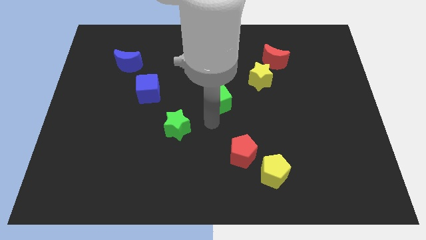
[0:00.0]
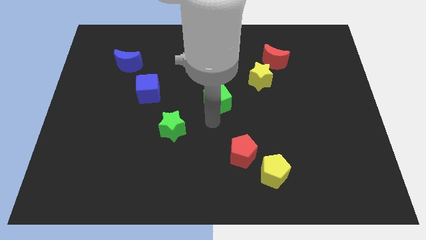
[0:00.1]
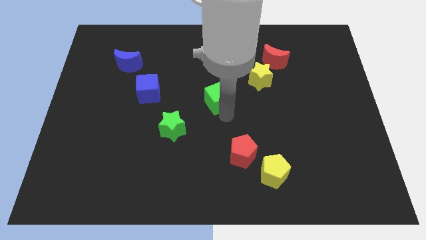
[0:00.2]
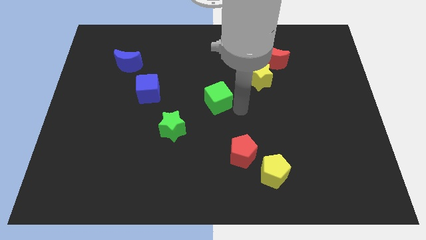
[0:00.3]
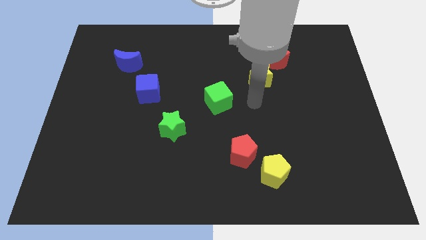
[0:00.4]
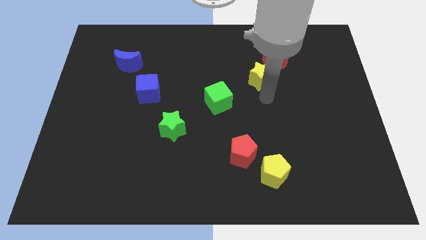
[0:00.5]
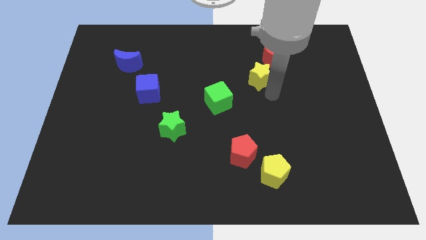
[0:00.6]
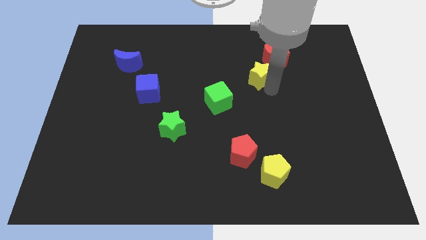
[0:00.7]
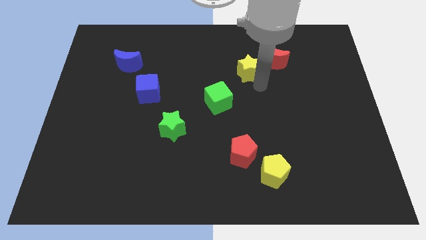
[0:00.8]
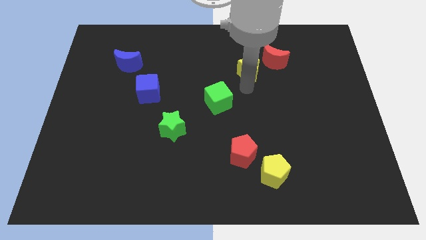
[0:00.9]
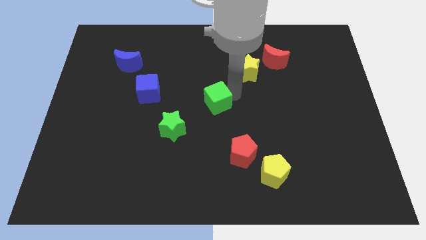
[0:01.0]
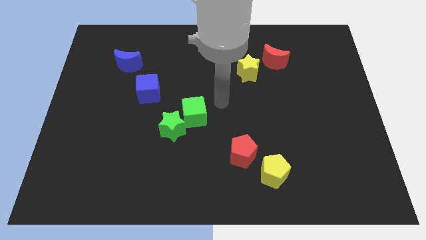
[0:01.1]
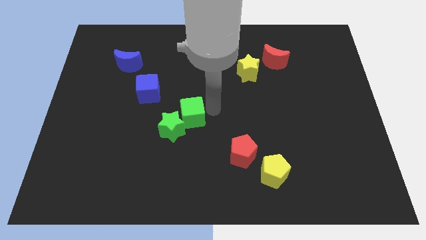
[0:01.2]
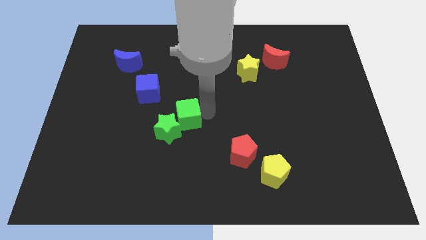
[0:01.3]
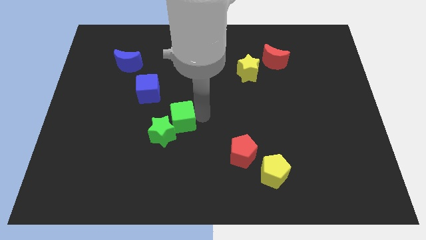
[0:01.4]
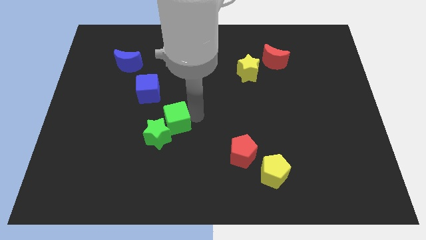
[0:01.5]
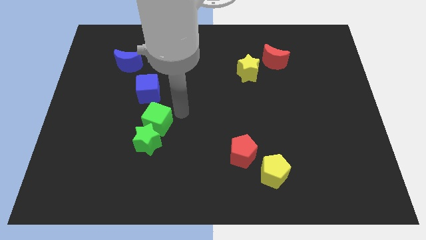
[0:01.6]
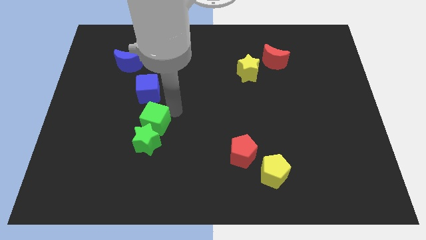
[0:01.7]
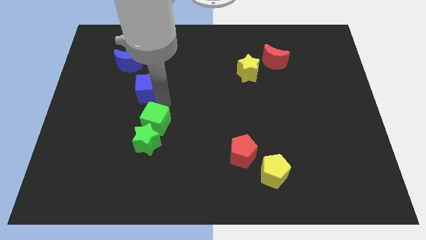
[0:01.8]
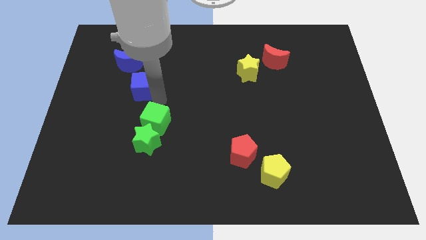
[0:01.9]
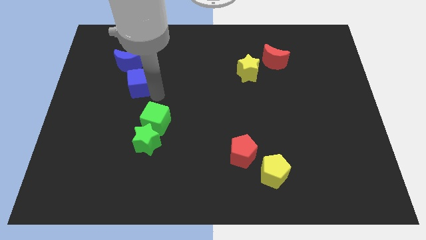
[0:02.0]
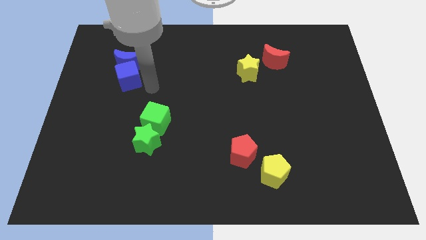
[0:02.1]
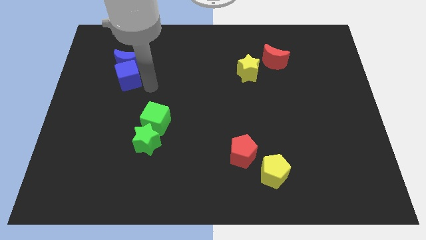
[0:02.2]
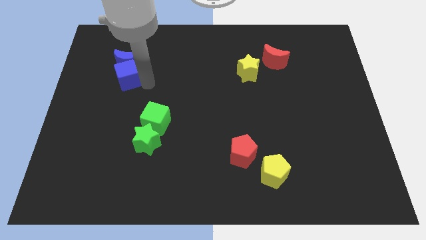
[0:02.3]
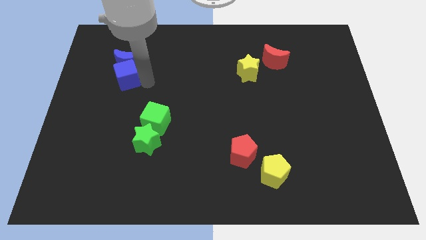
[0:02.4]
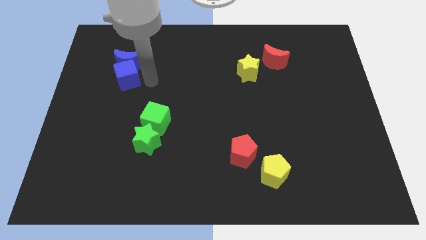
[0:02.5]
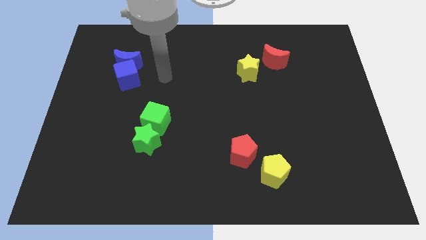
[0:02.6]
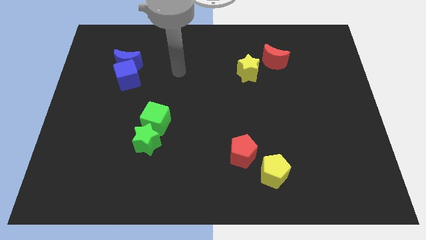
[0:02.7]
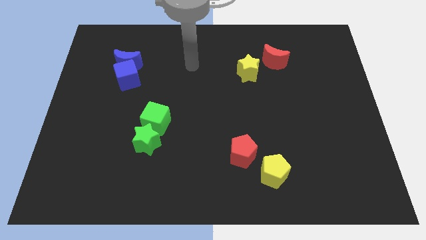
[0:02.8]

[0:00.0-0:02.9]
slide the blue cube into the blue moon

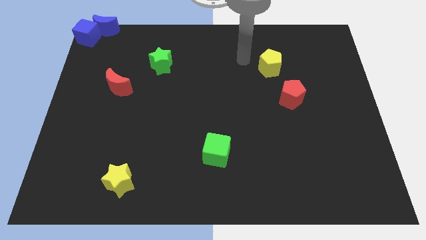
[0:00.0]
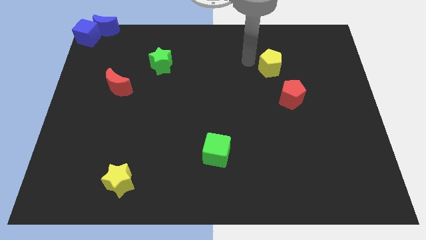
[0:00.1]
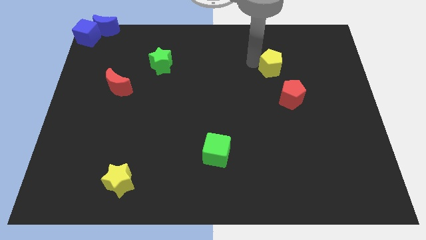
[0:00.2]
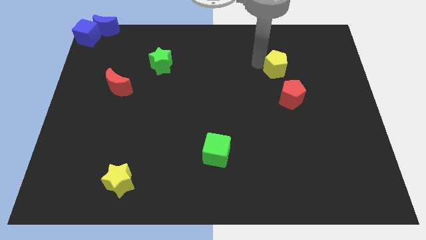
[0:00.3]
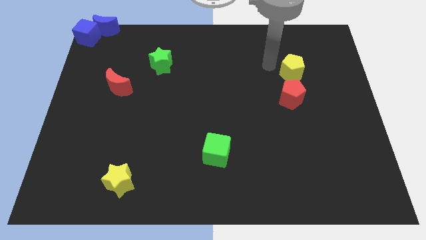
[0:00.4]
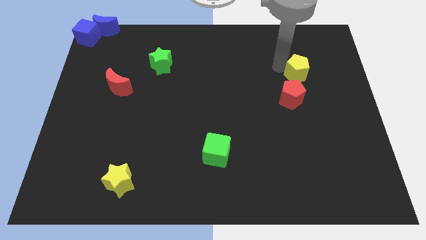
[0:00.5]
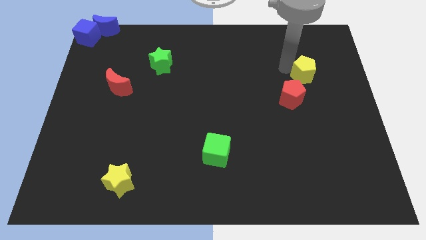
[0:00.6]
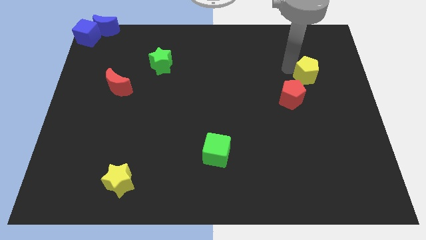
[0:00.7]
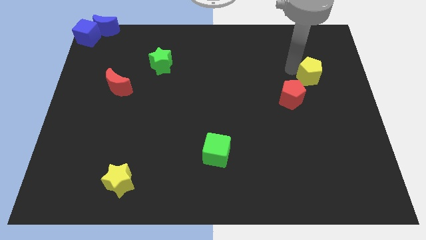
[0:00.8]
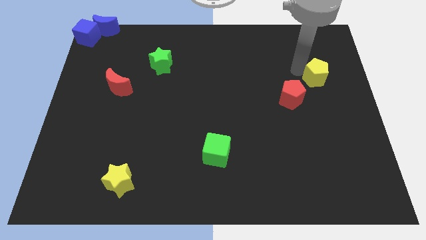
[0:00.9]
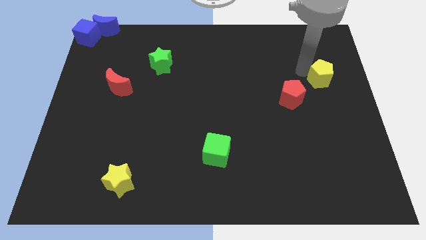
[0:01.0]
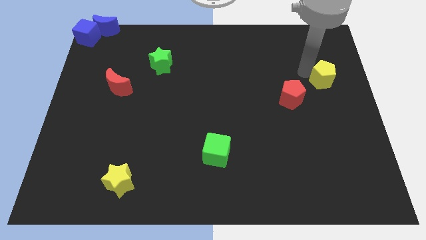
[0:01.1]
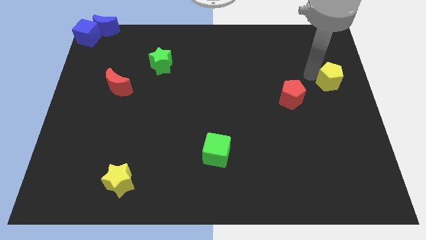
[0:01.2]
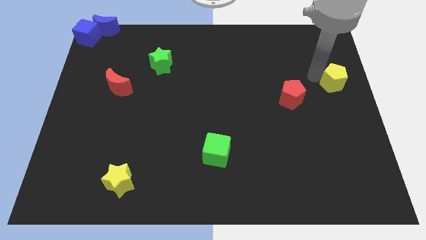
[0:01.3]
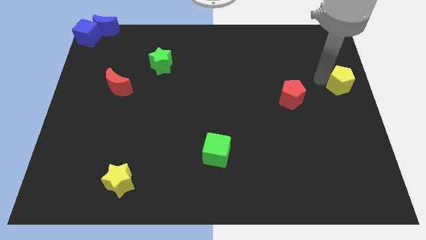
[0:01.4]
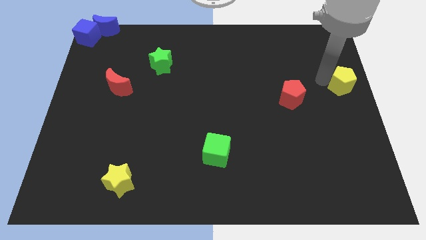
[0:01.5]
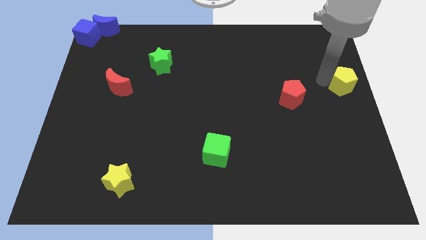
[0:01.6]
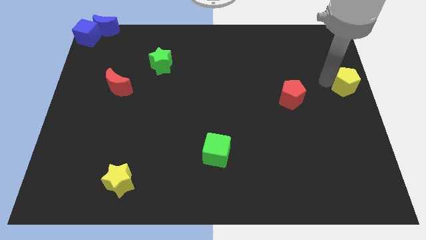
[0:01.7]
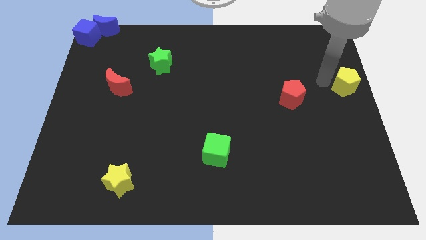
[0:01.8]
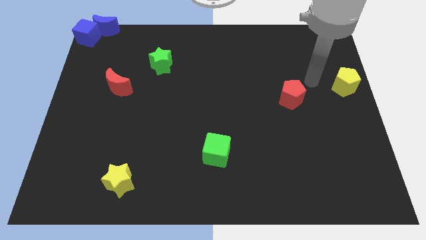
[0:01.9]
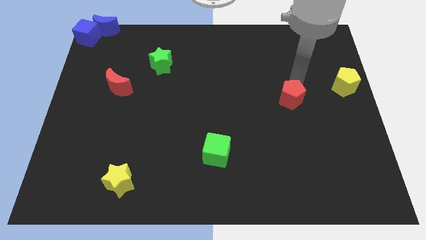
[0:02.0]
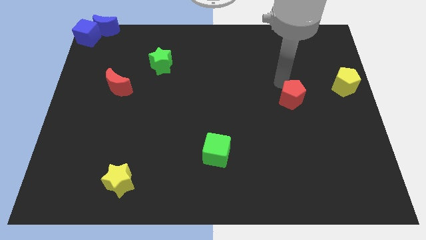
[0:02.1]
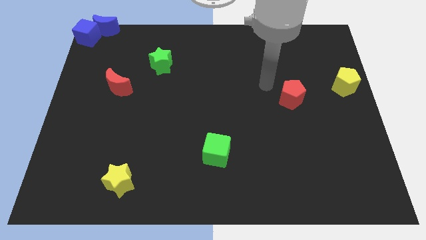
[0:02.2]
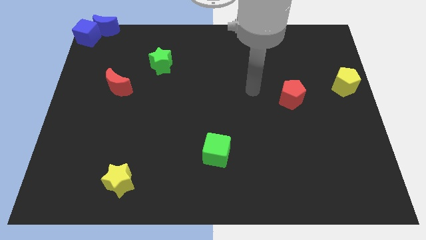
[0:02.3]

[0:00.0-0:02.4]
move the yellow pentagon to the right side of the board

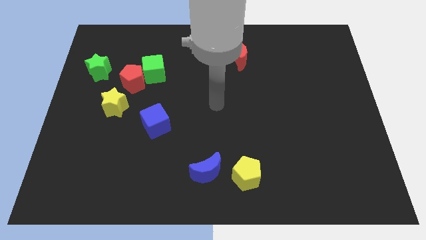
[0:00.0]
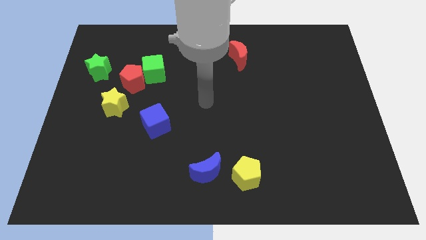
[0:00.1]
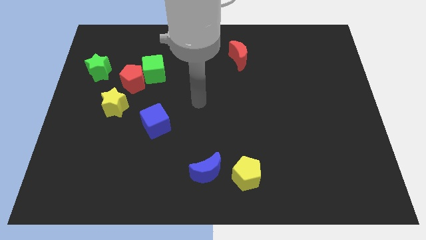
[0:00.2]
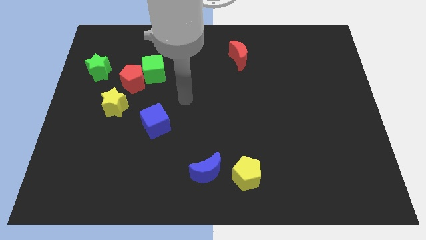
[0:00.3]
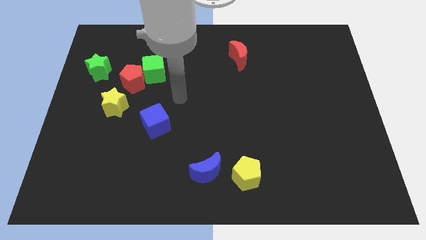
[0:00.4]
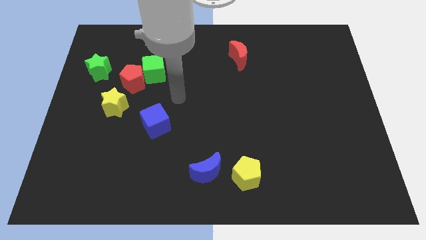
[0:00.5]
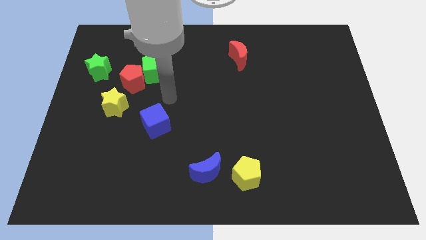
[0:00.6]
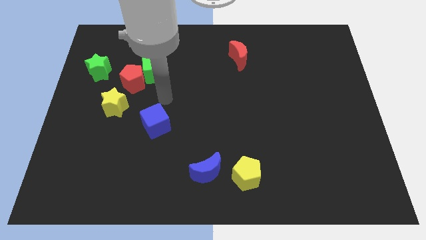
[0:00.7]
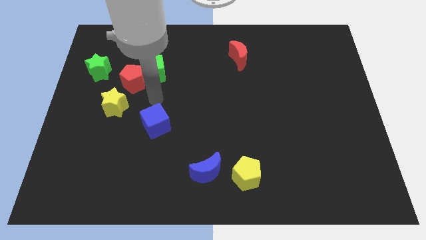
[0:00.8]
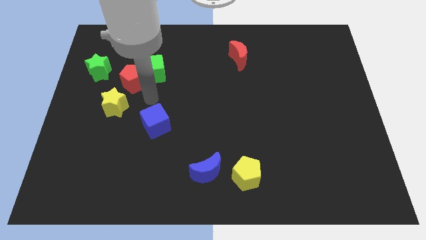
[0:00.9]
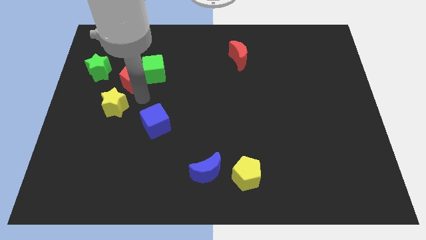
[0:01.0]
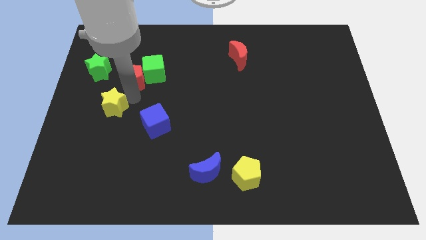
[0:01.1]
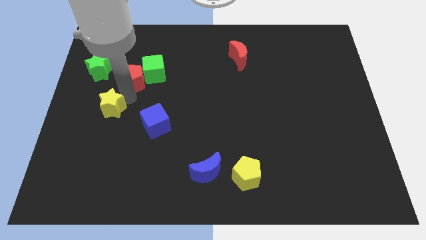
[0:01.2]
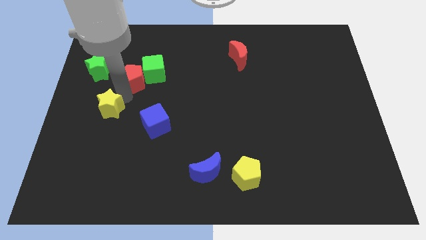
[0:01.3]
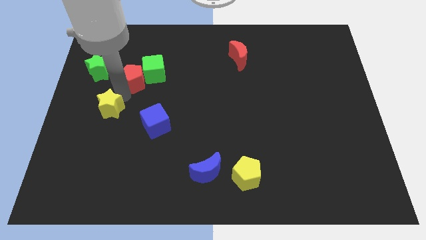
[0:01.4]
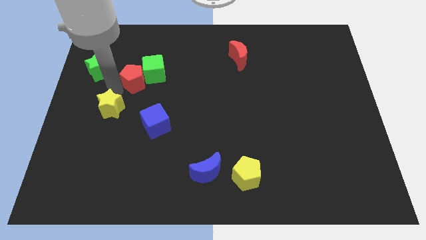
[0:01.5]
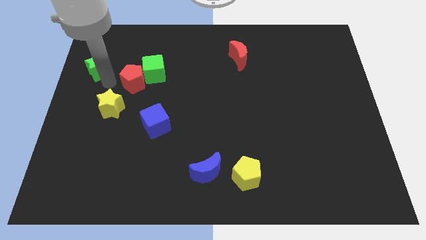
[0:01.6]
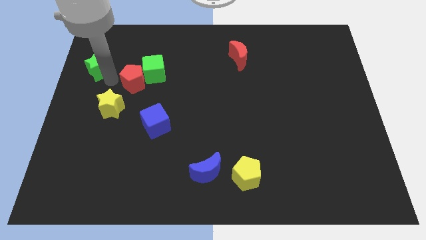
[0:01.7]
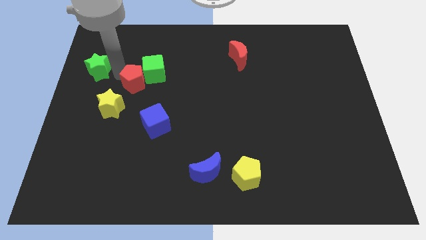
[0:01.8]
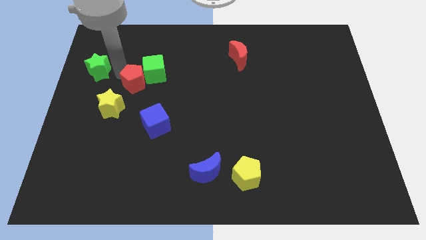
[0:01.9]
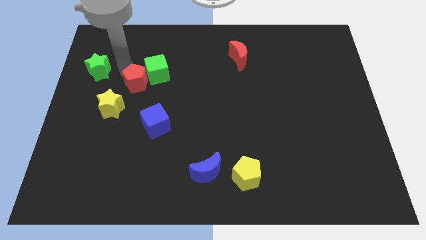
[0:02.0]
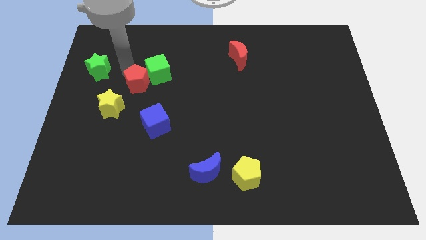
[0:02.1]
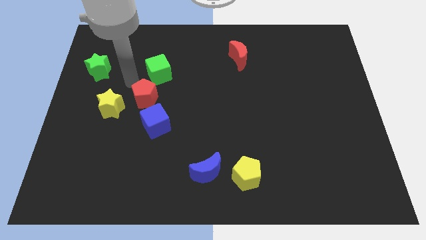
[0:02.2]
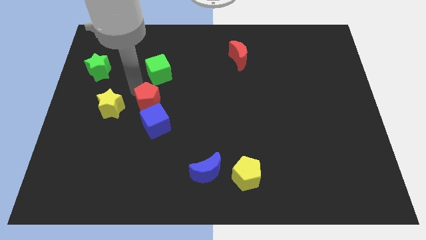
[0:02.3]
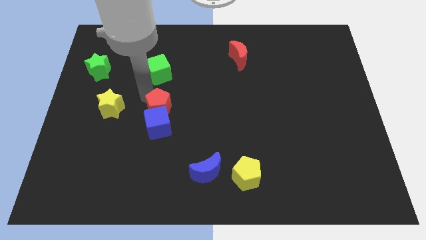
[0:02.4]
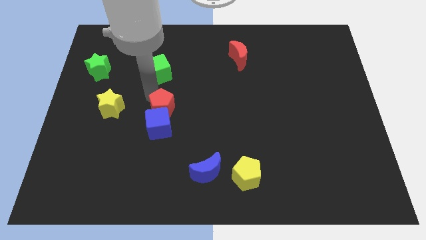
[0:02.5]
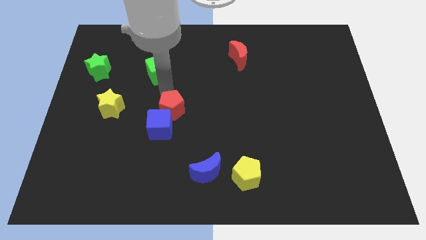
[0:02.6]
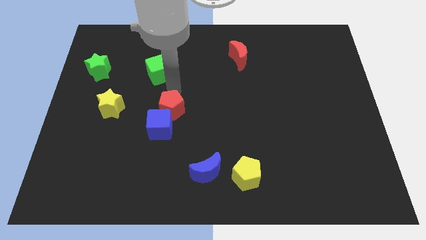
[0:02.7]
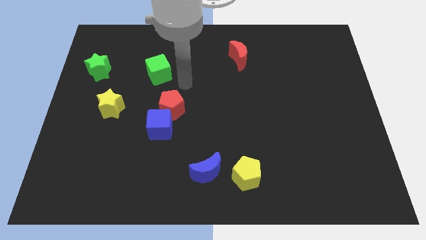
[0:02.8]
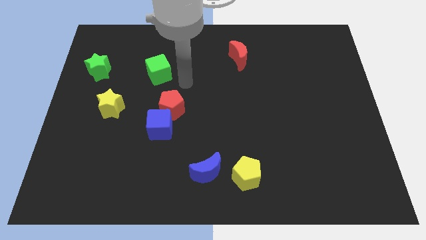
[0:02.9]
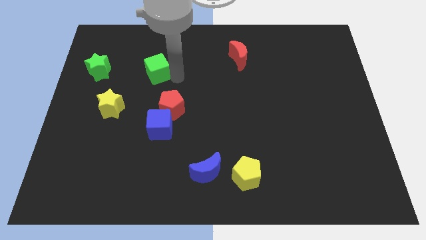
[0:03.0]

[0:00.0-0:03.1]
place a red pentagon close the blue cube

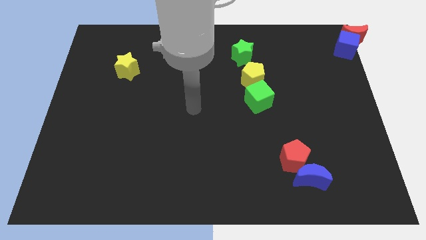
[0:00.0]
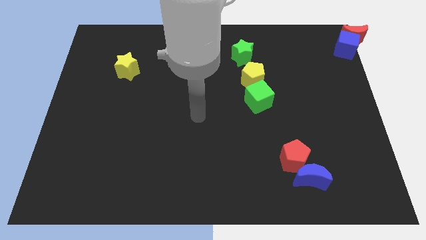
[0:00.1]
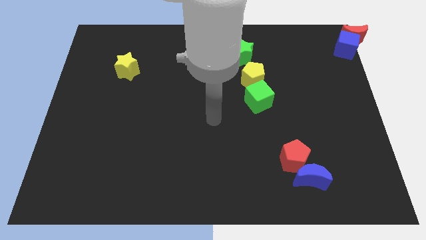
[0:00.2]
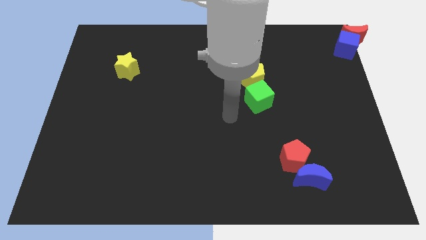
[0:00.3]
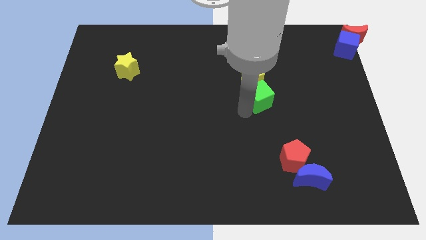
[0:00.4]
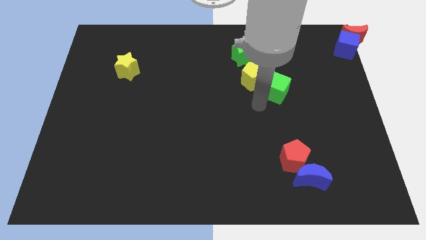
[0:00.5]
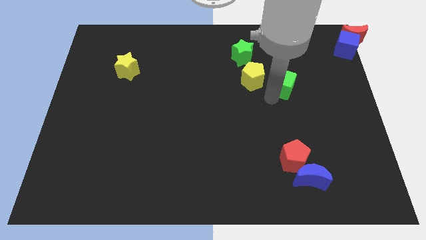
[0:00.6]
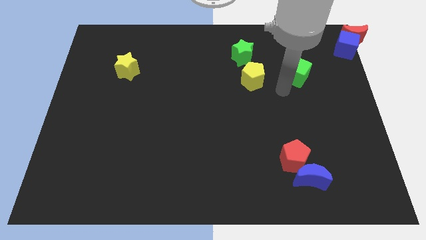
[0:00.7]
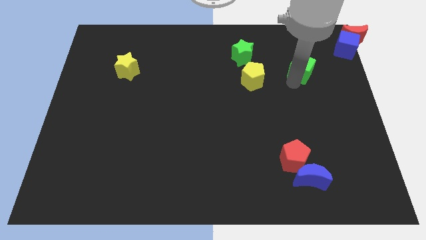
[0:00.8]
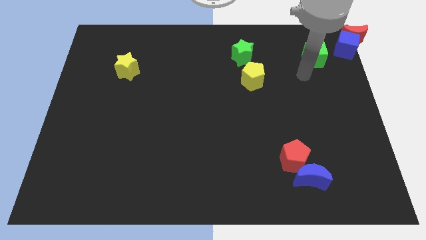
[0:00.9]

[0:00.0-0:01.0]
place the green cube right to the yellow pentagon
